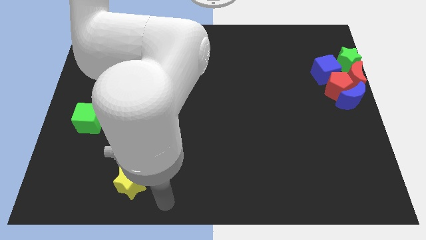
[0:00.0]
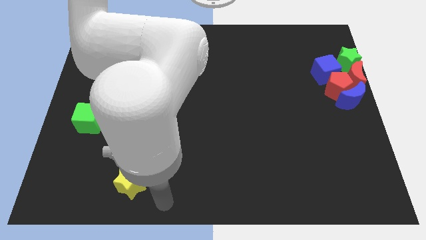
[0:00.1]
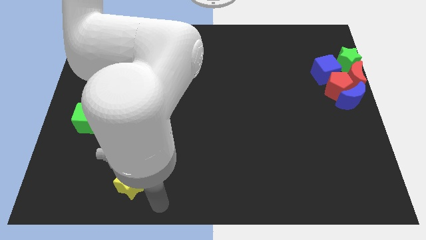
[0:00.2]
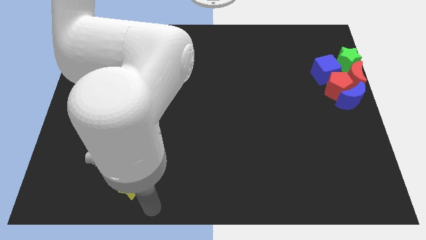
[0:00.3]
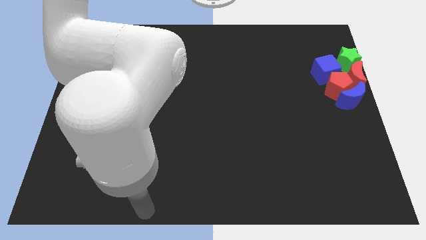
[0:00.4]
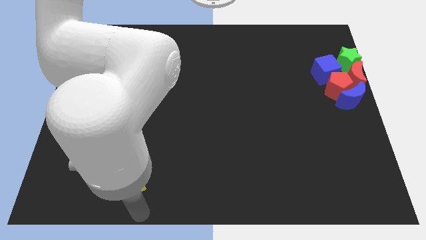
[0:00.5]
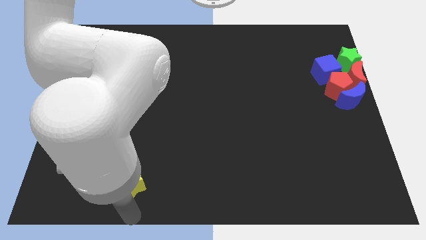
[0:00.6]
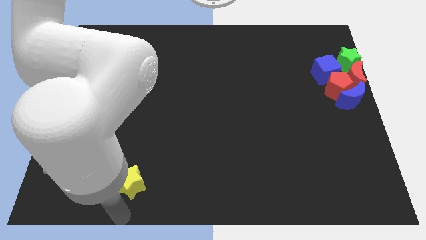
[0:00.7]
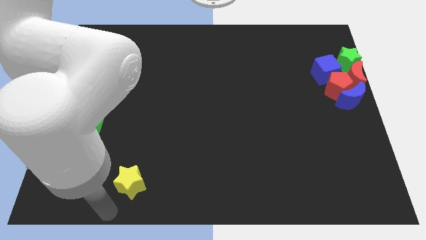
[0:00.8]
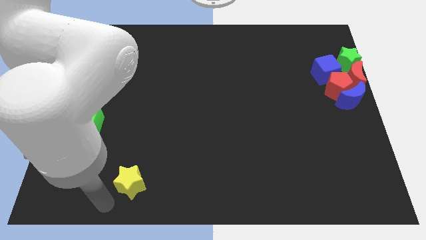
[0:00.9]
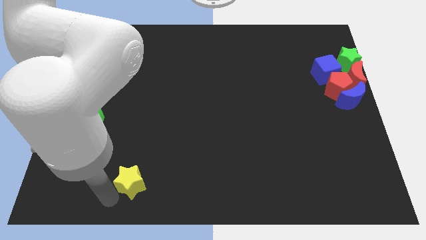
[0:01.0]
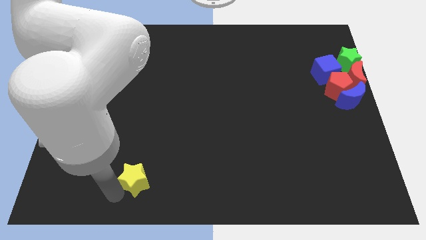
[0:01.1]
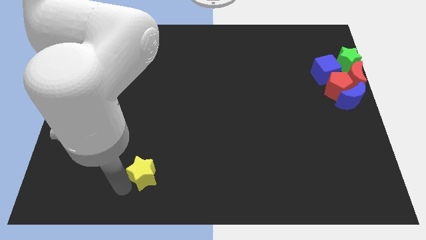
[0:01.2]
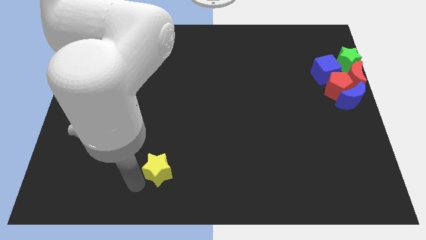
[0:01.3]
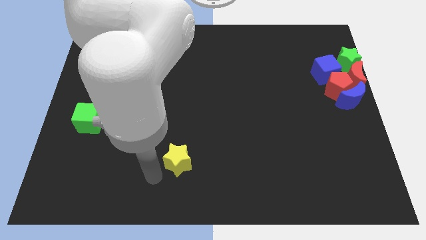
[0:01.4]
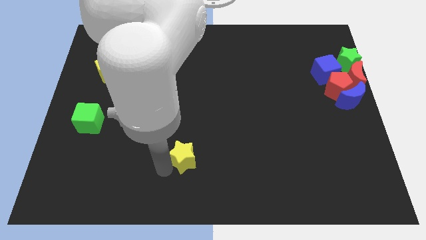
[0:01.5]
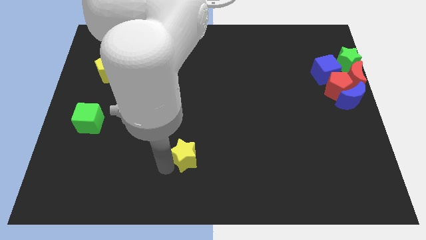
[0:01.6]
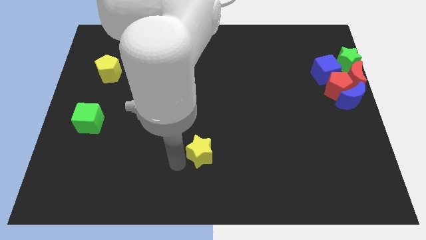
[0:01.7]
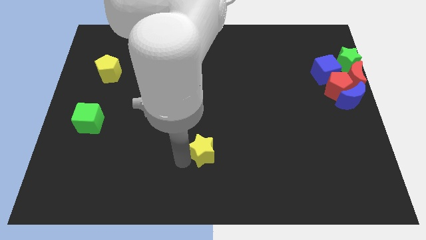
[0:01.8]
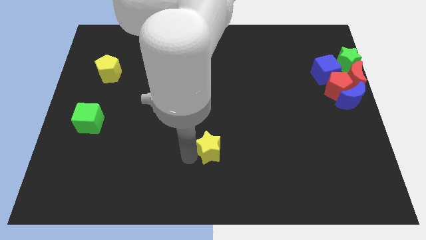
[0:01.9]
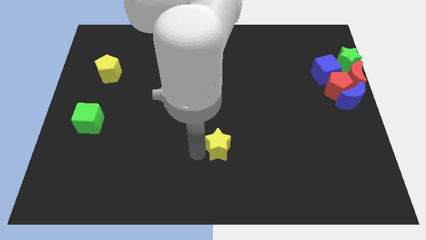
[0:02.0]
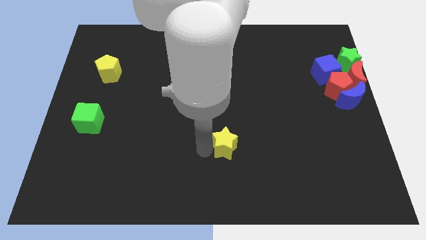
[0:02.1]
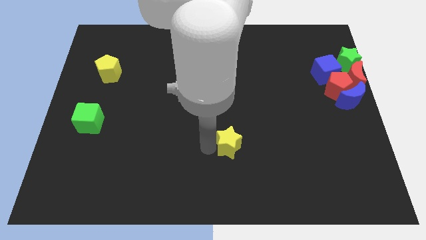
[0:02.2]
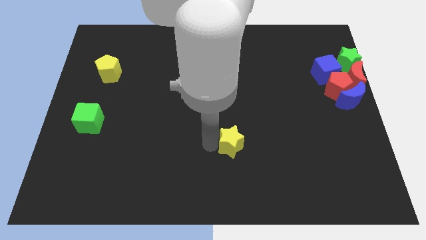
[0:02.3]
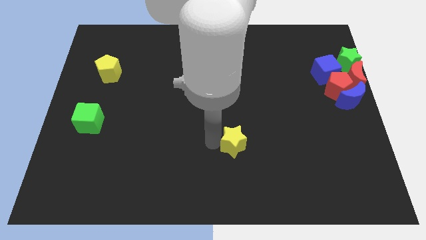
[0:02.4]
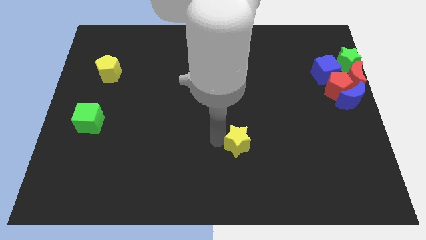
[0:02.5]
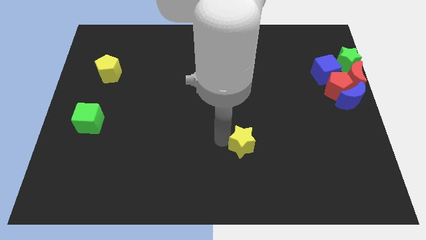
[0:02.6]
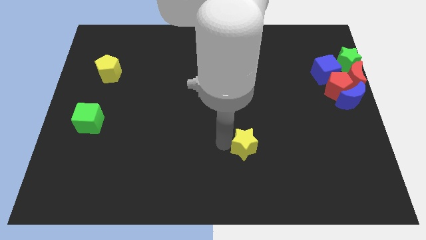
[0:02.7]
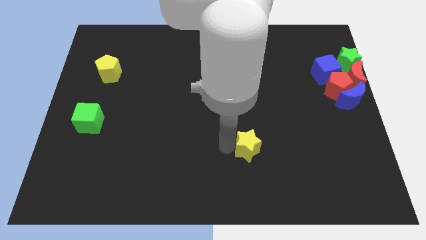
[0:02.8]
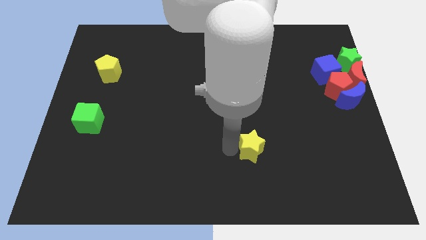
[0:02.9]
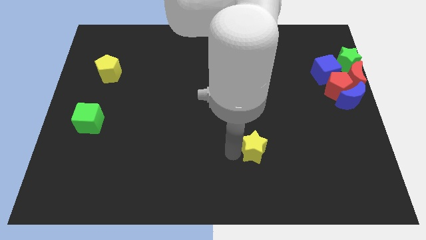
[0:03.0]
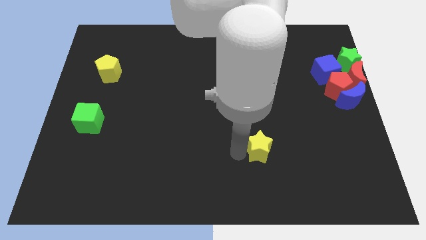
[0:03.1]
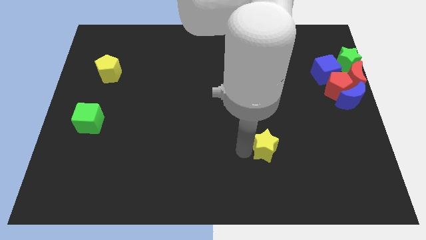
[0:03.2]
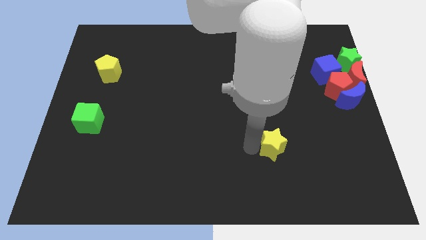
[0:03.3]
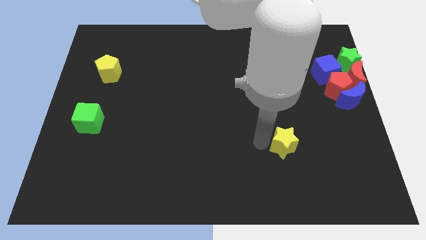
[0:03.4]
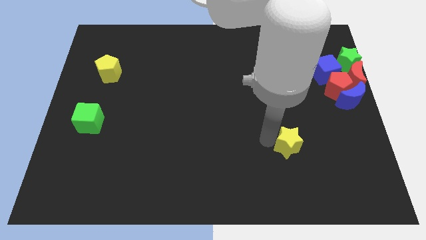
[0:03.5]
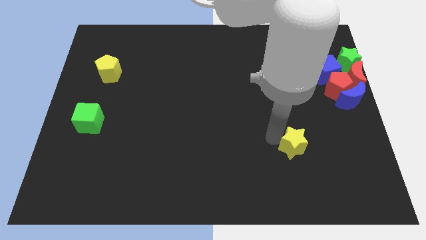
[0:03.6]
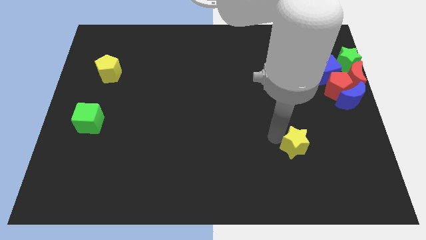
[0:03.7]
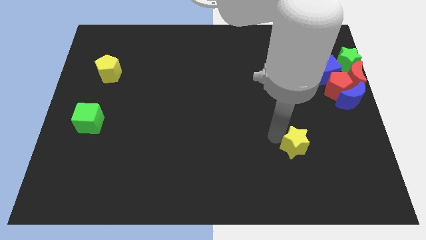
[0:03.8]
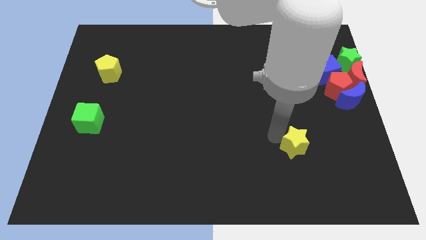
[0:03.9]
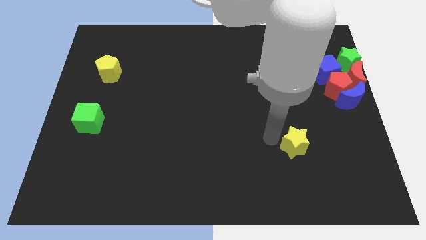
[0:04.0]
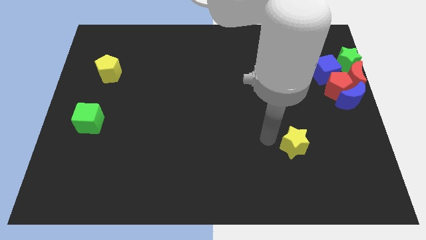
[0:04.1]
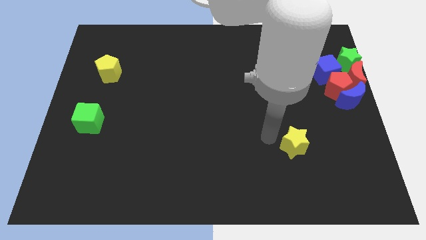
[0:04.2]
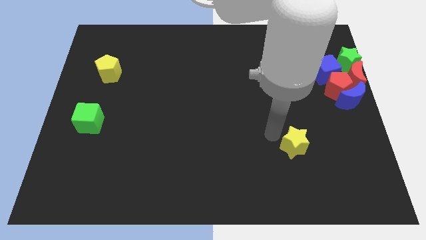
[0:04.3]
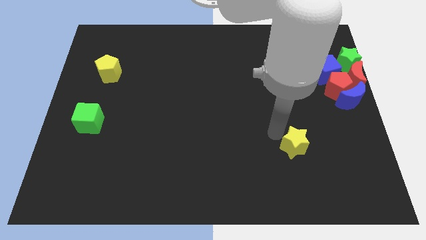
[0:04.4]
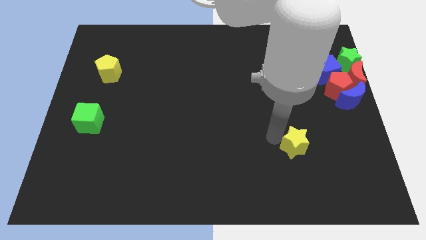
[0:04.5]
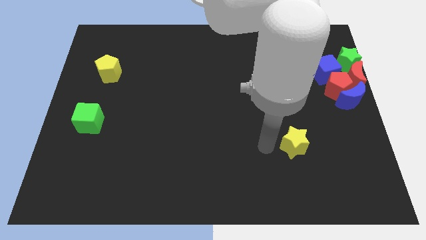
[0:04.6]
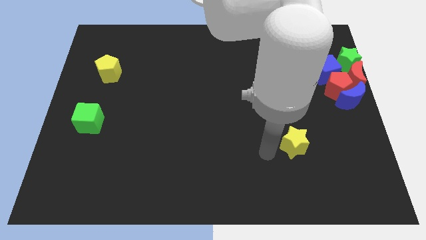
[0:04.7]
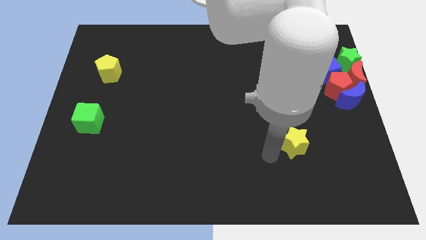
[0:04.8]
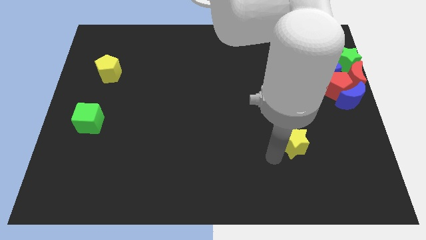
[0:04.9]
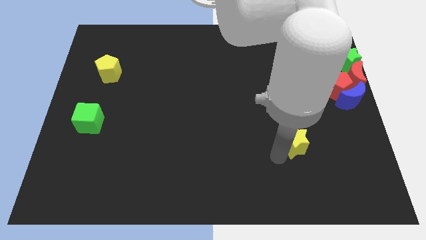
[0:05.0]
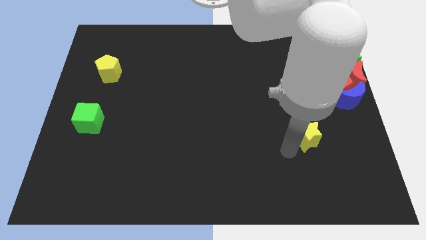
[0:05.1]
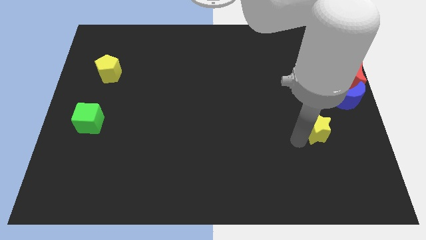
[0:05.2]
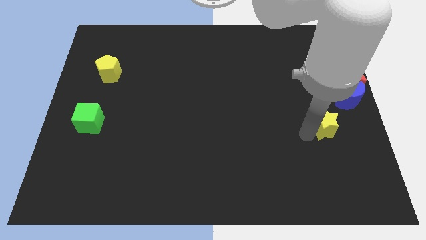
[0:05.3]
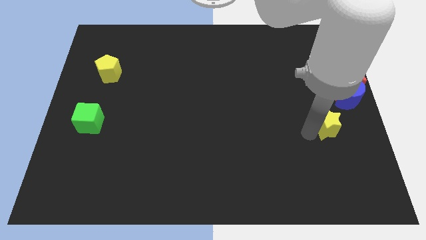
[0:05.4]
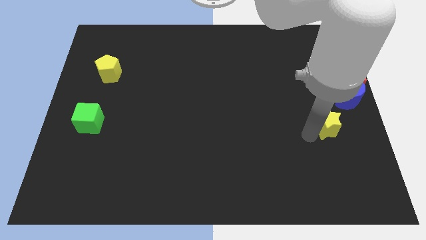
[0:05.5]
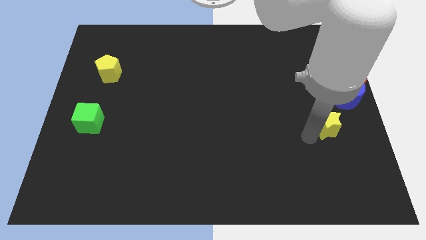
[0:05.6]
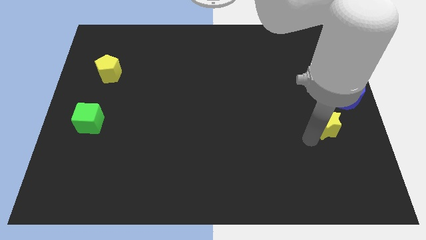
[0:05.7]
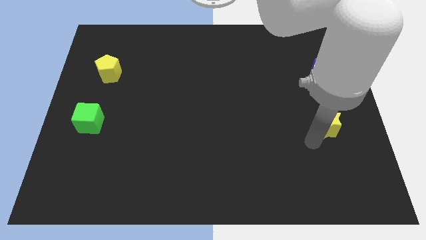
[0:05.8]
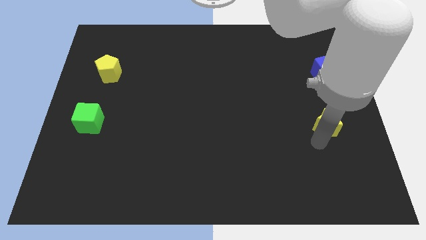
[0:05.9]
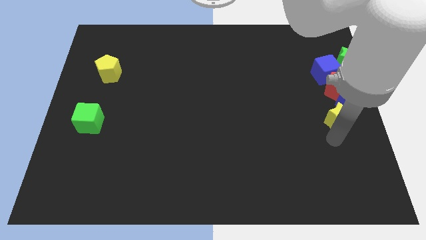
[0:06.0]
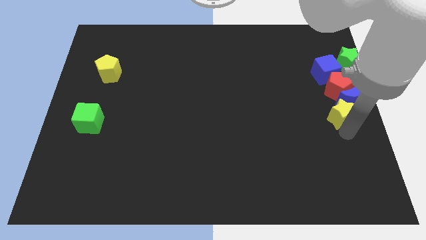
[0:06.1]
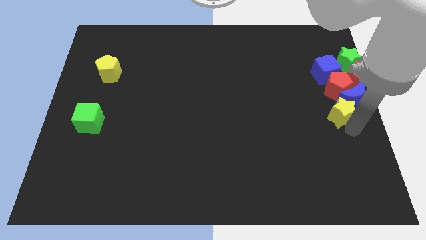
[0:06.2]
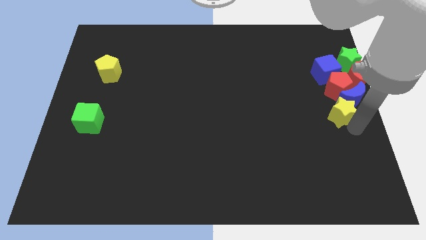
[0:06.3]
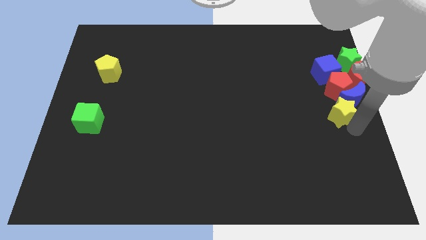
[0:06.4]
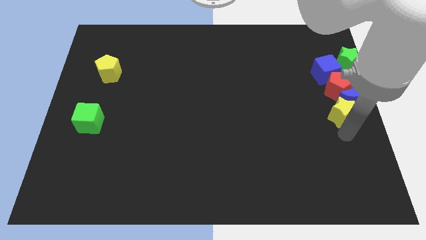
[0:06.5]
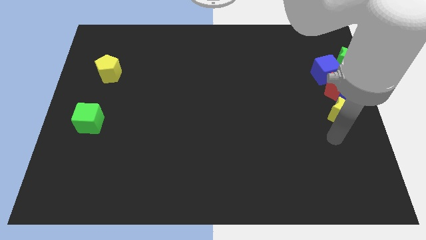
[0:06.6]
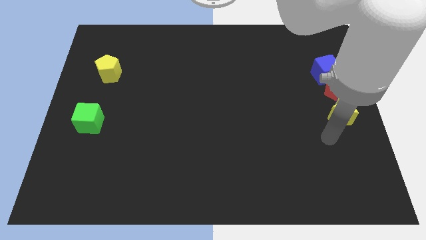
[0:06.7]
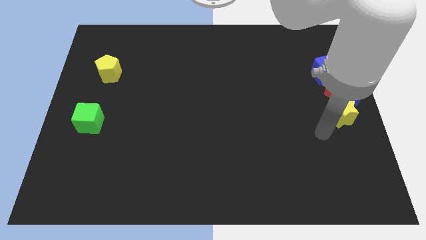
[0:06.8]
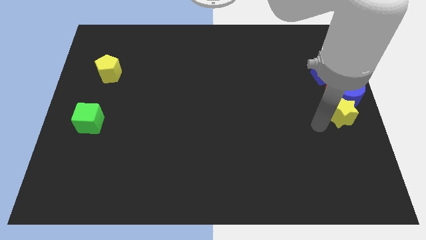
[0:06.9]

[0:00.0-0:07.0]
move the yellow star below the blue moon

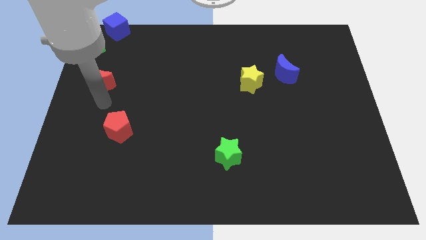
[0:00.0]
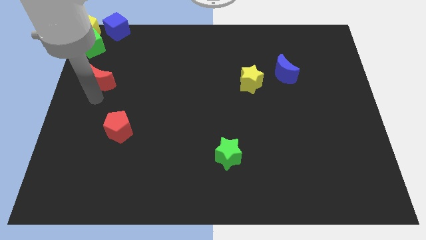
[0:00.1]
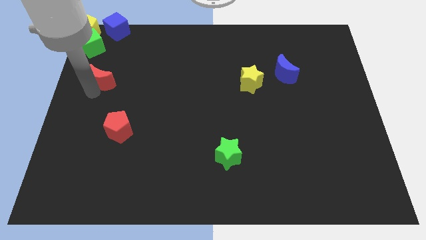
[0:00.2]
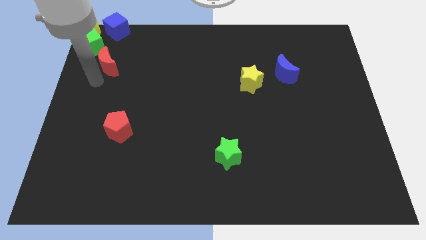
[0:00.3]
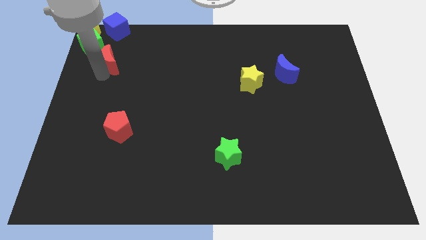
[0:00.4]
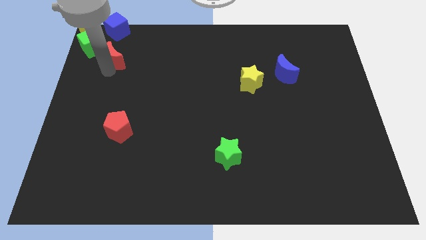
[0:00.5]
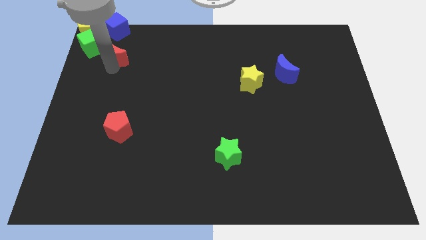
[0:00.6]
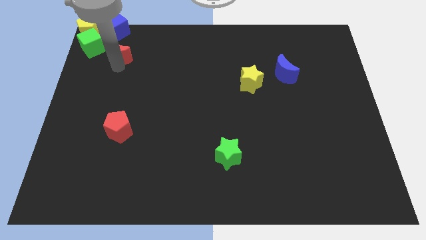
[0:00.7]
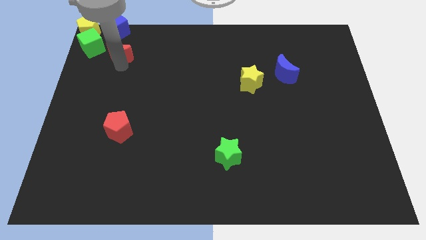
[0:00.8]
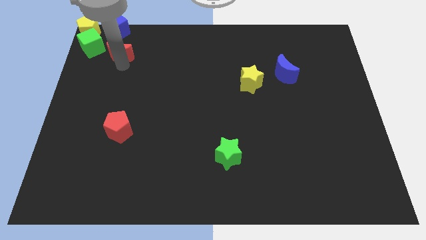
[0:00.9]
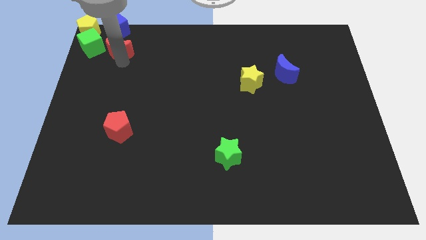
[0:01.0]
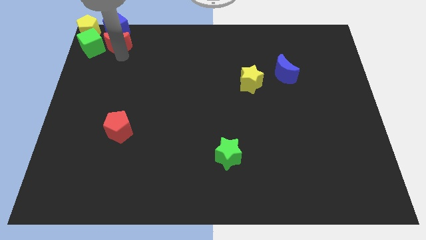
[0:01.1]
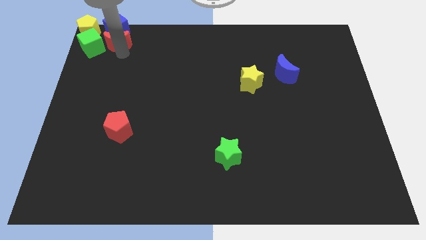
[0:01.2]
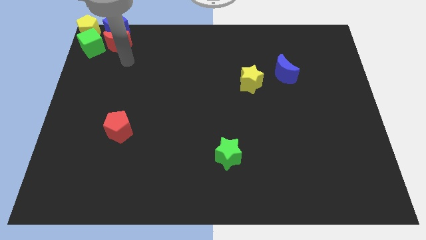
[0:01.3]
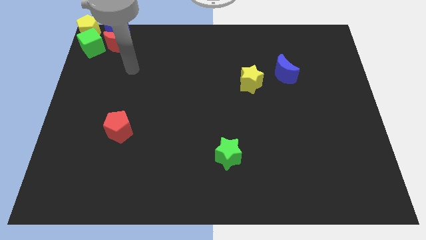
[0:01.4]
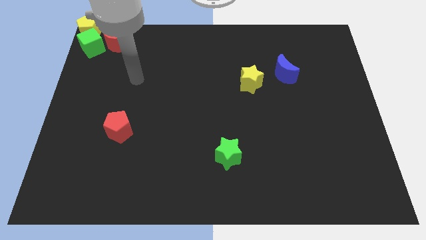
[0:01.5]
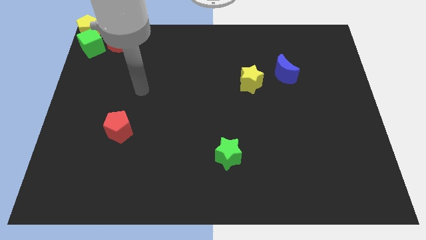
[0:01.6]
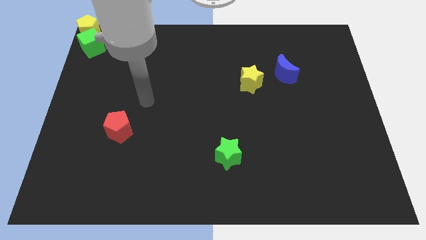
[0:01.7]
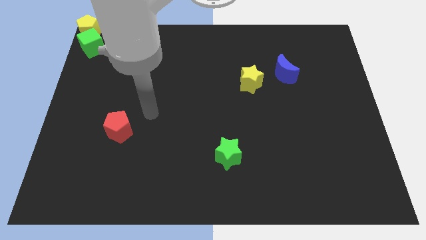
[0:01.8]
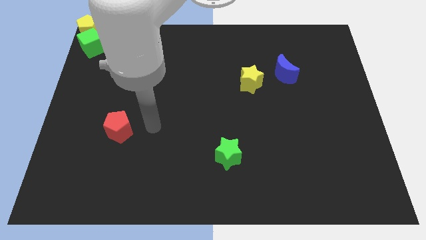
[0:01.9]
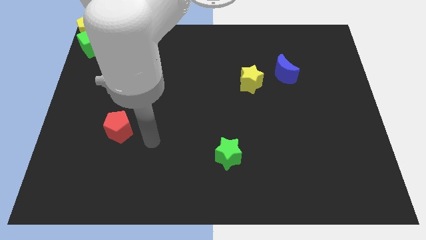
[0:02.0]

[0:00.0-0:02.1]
move the red moon to the top left corner of the board
